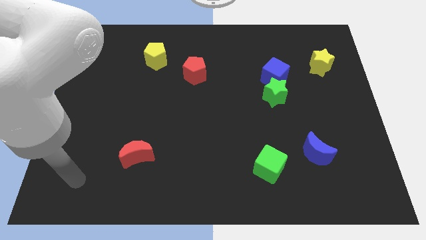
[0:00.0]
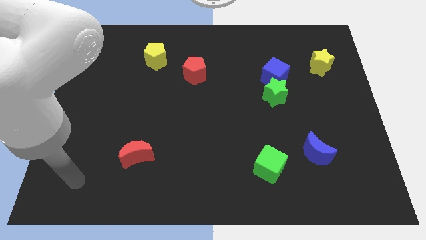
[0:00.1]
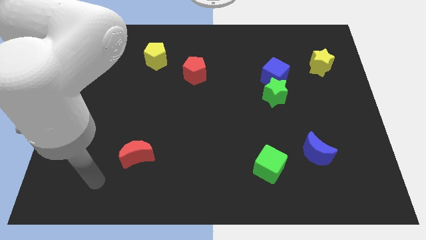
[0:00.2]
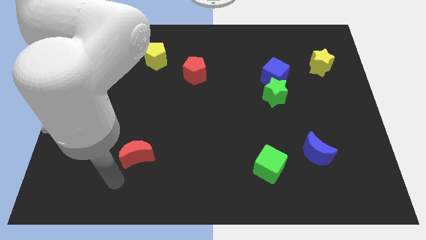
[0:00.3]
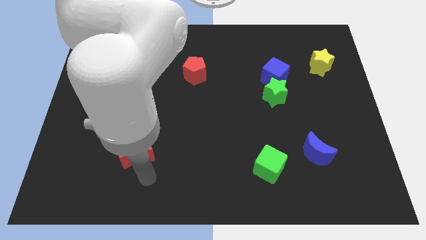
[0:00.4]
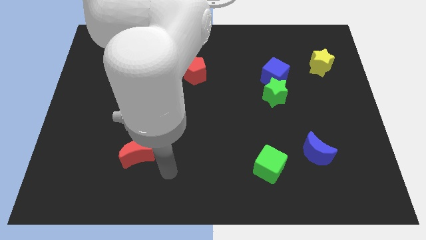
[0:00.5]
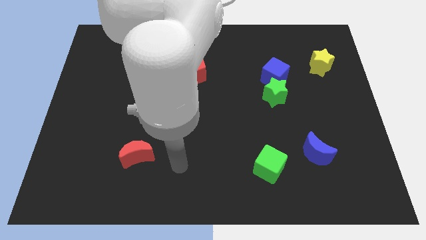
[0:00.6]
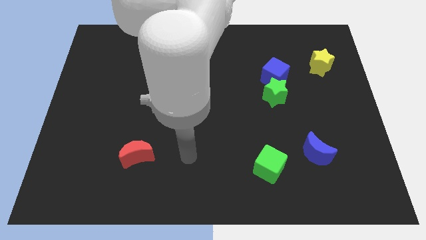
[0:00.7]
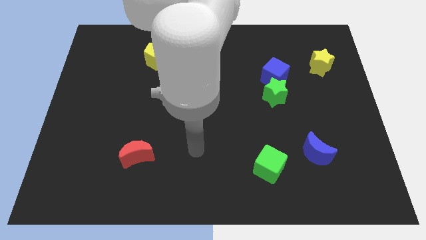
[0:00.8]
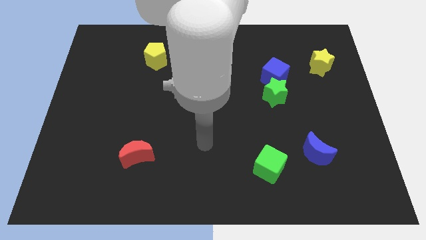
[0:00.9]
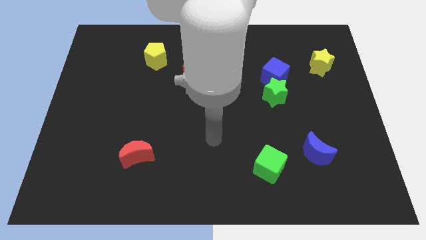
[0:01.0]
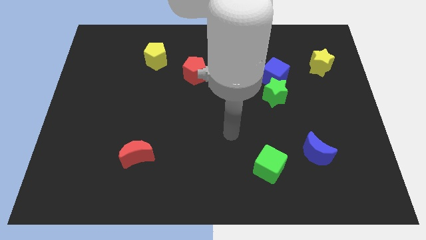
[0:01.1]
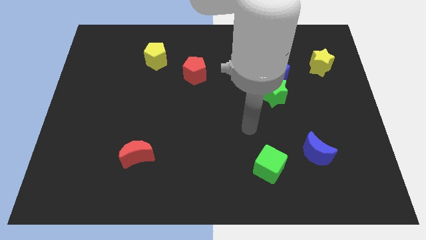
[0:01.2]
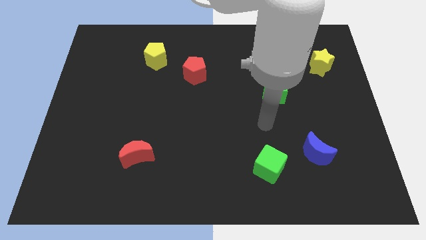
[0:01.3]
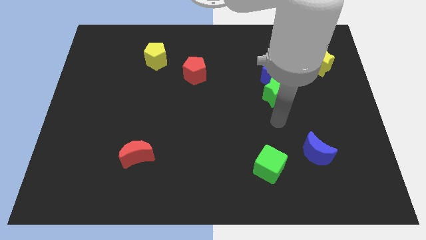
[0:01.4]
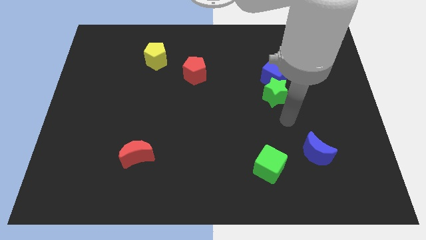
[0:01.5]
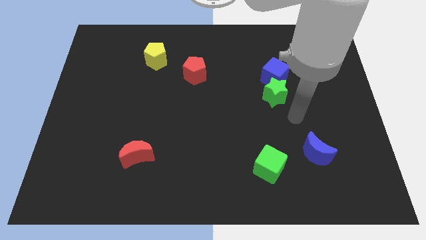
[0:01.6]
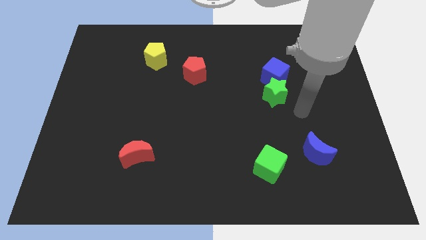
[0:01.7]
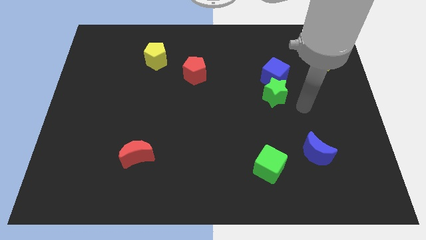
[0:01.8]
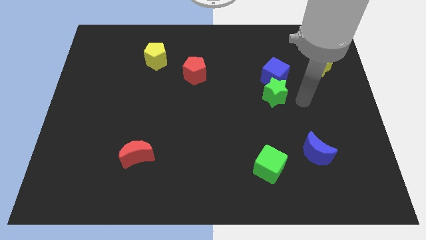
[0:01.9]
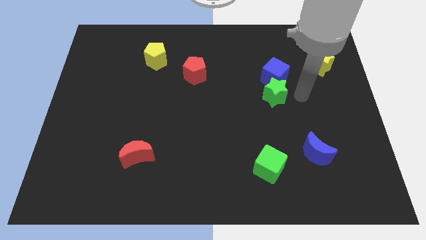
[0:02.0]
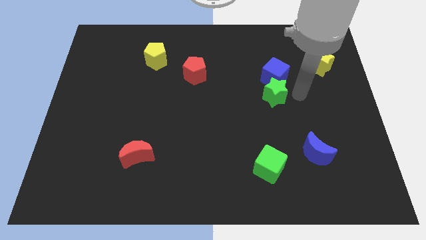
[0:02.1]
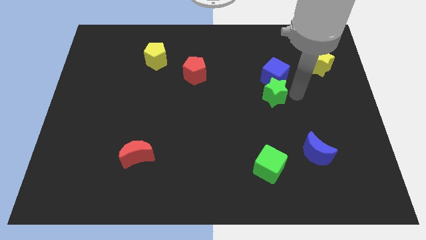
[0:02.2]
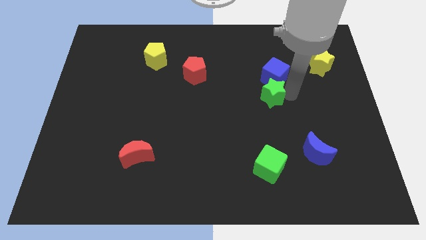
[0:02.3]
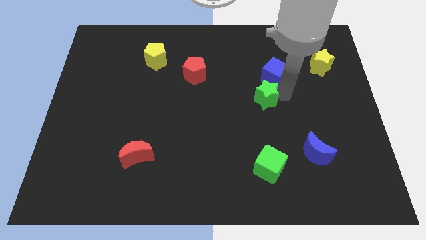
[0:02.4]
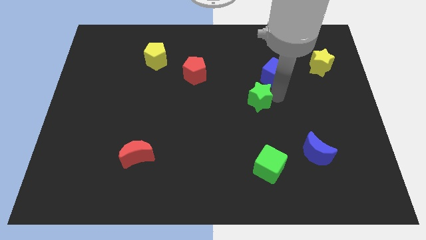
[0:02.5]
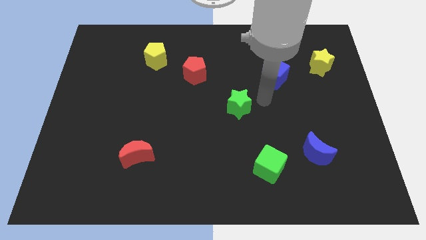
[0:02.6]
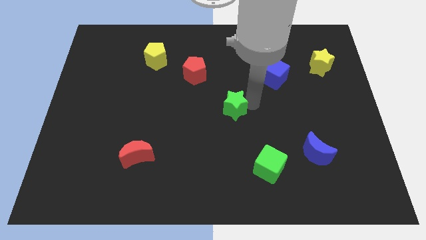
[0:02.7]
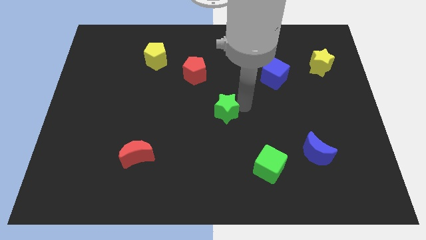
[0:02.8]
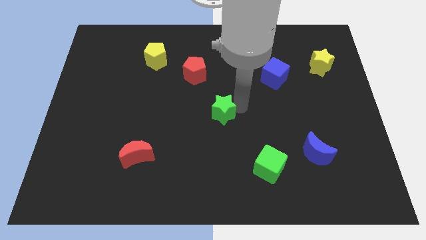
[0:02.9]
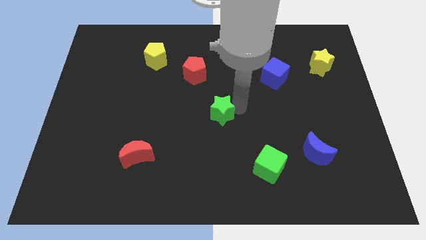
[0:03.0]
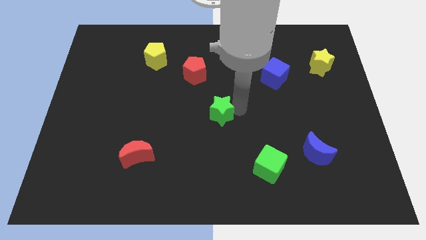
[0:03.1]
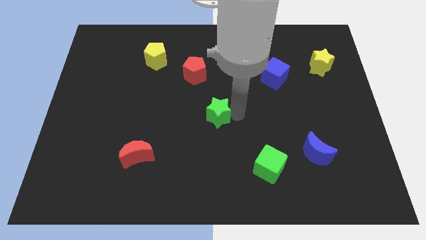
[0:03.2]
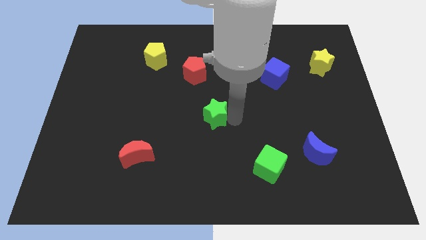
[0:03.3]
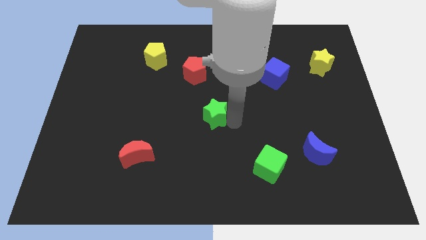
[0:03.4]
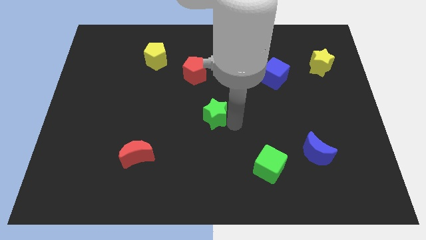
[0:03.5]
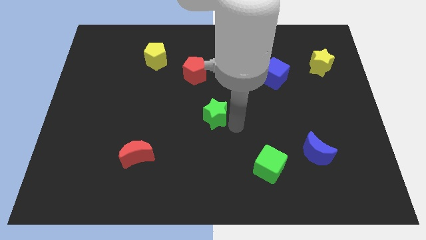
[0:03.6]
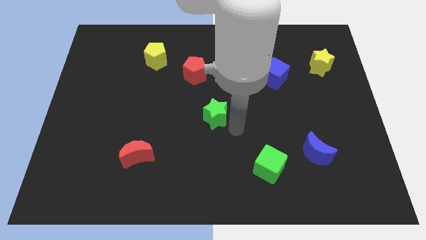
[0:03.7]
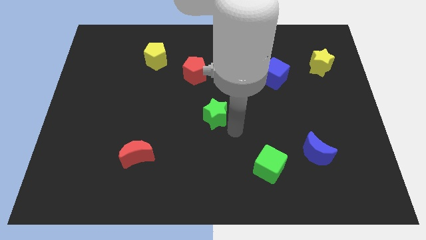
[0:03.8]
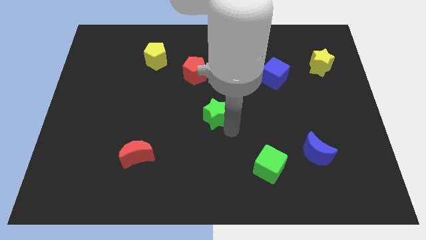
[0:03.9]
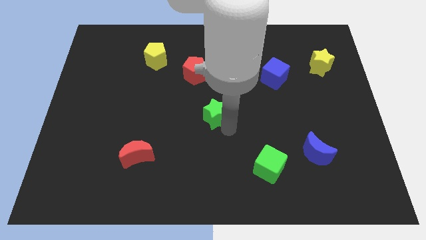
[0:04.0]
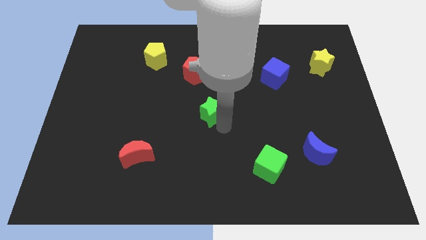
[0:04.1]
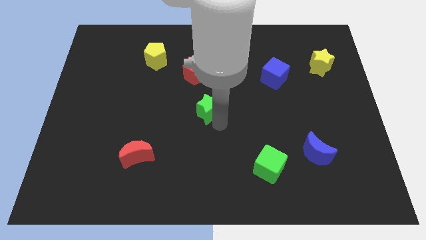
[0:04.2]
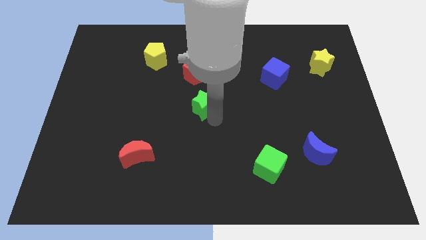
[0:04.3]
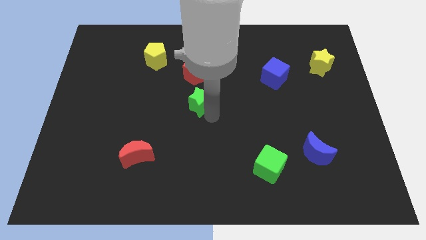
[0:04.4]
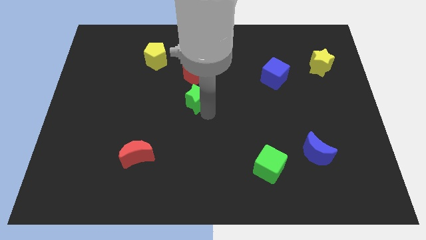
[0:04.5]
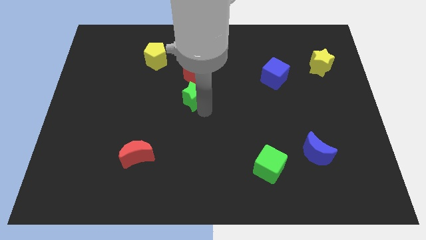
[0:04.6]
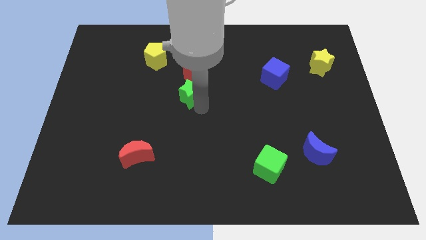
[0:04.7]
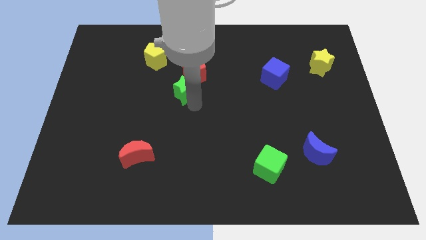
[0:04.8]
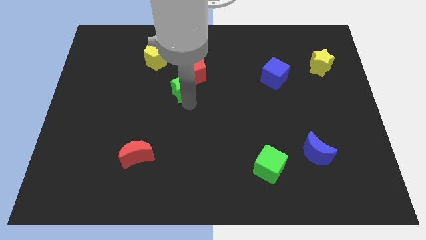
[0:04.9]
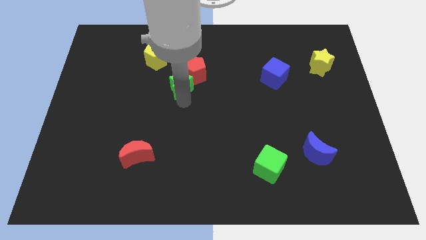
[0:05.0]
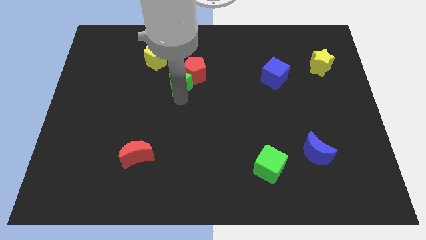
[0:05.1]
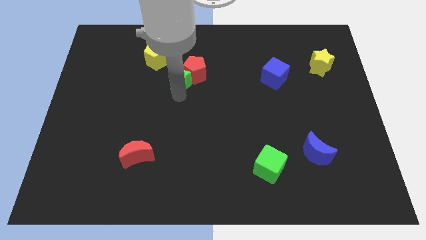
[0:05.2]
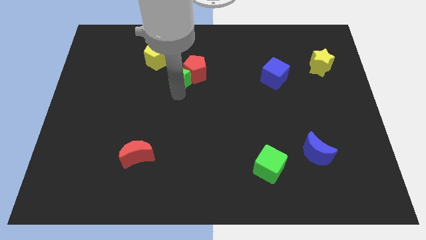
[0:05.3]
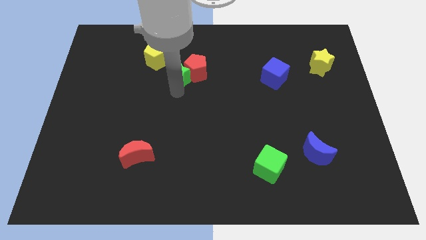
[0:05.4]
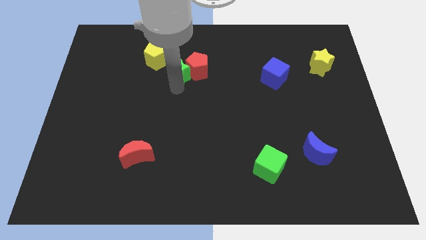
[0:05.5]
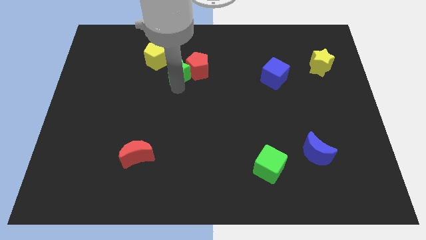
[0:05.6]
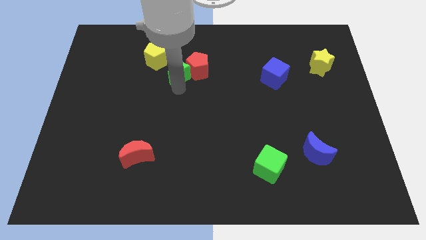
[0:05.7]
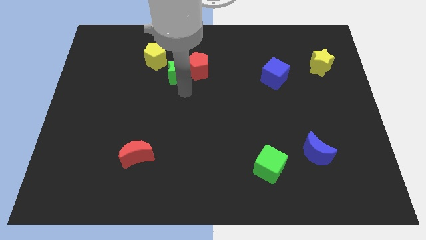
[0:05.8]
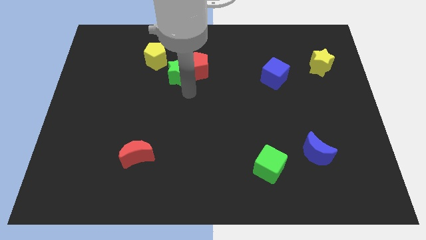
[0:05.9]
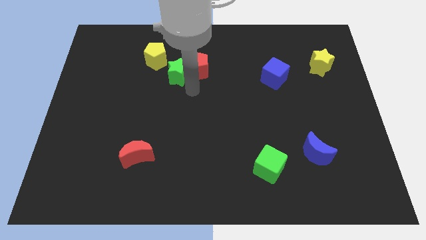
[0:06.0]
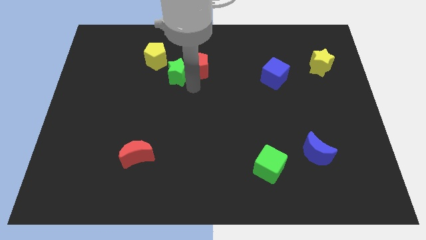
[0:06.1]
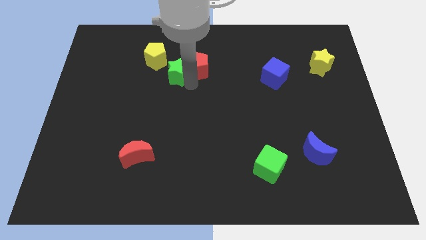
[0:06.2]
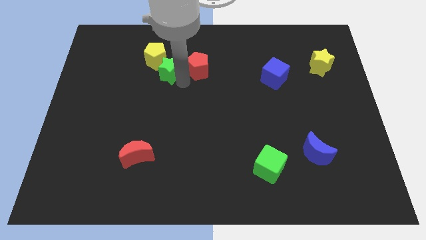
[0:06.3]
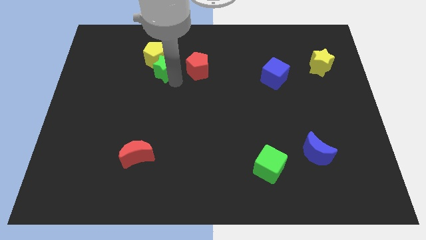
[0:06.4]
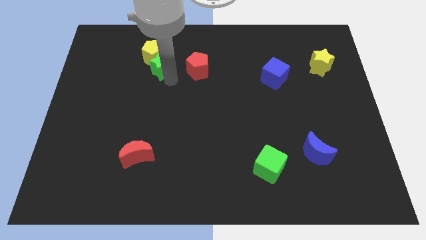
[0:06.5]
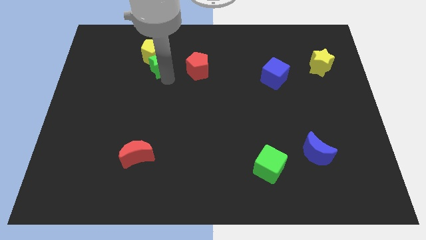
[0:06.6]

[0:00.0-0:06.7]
put the green star next to the yellow pentagon

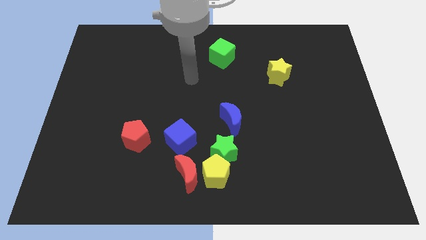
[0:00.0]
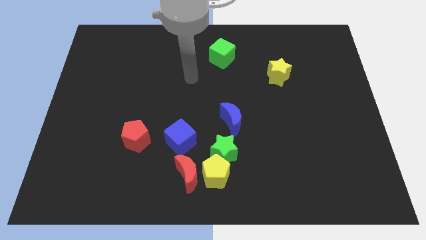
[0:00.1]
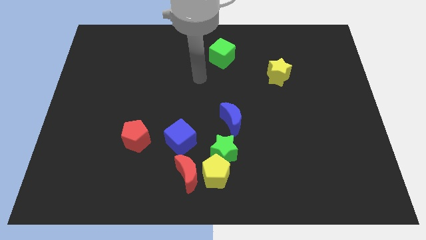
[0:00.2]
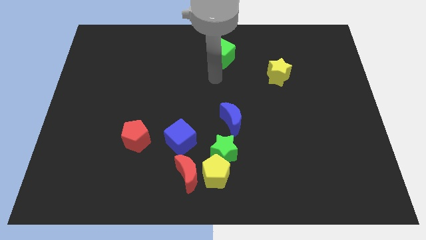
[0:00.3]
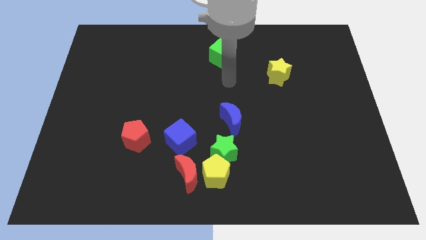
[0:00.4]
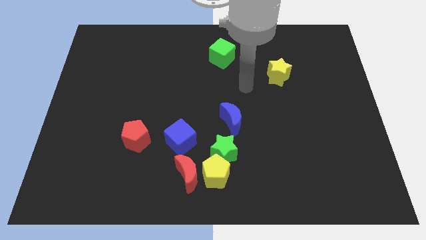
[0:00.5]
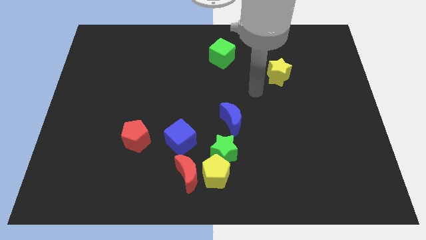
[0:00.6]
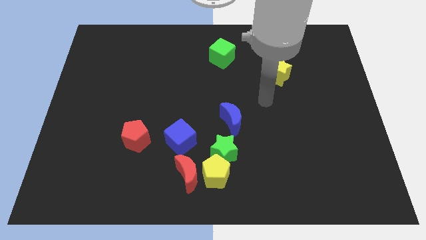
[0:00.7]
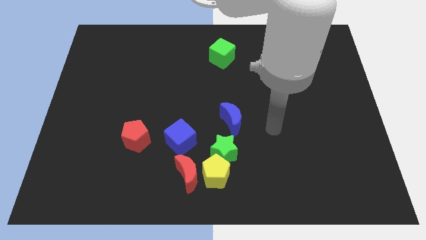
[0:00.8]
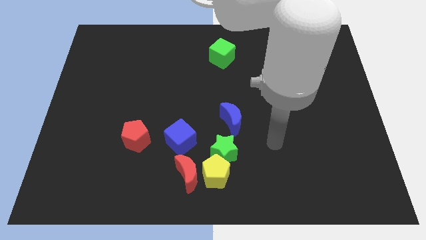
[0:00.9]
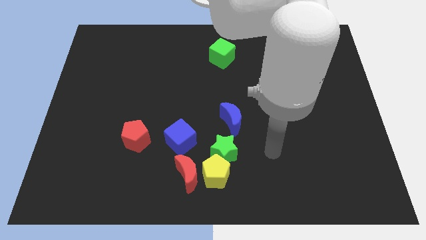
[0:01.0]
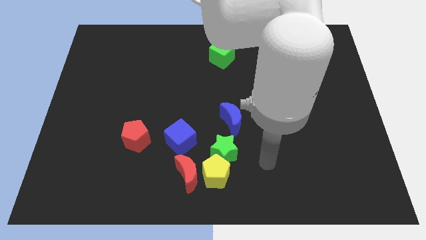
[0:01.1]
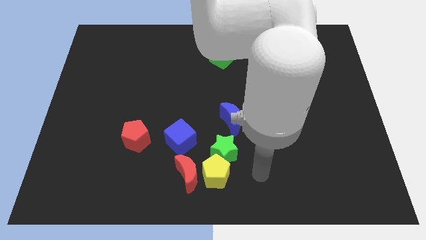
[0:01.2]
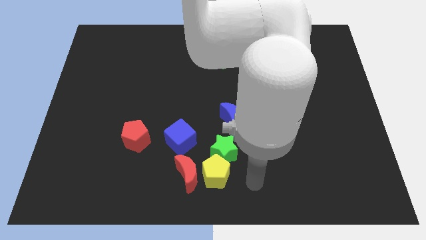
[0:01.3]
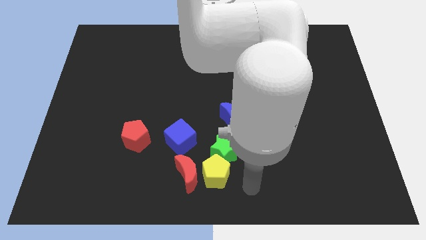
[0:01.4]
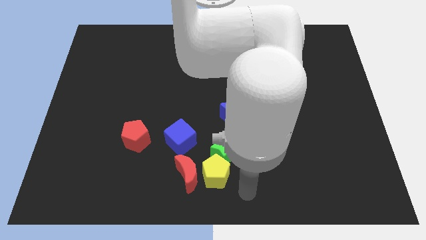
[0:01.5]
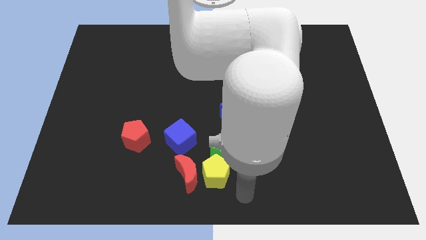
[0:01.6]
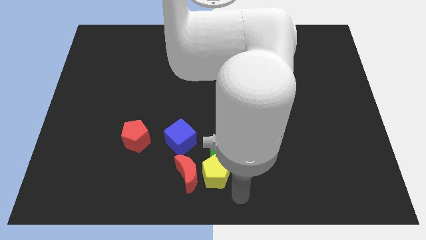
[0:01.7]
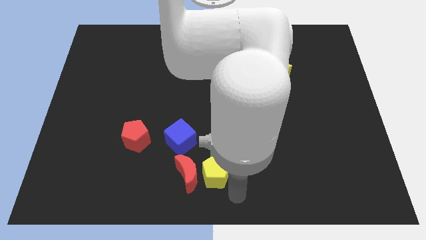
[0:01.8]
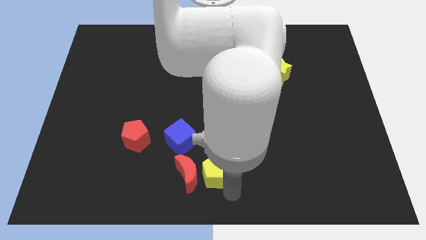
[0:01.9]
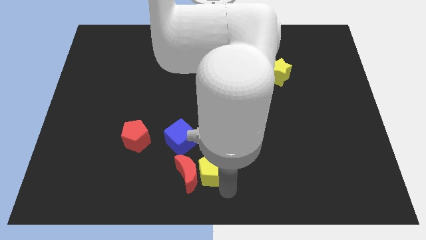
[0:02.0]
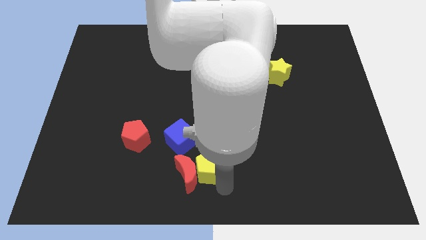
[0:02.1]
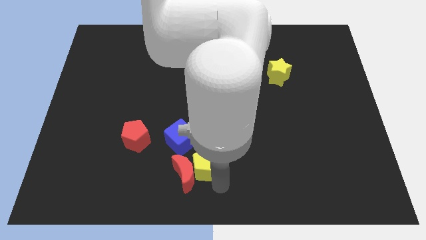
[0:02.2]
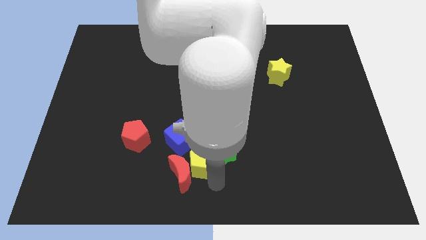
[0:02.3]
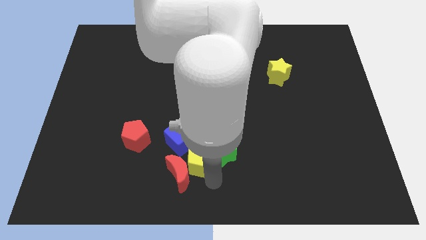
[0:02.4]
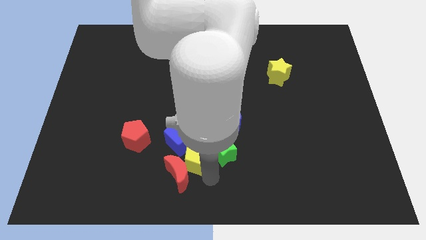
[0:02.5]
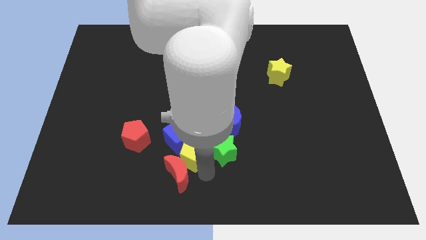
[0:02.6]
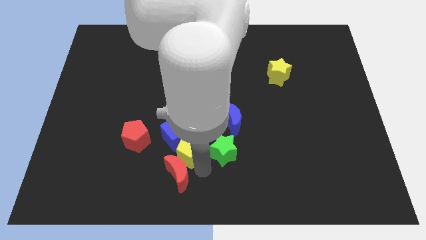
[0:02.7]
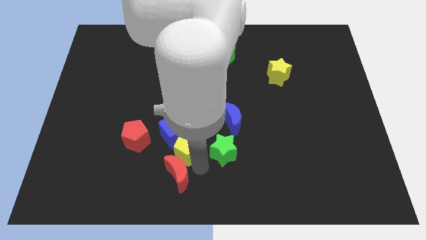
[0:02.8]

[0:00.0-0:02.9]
put the yellow pentagon next to the blue cube
